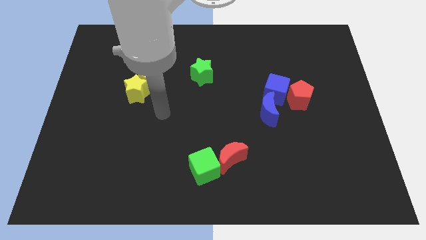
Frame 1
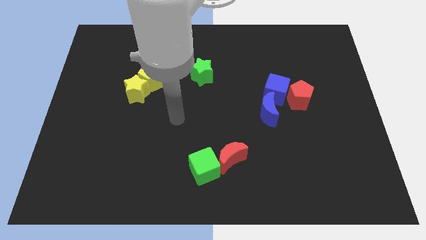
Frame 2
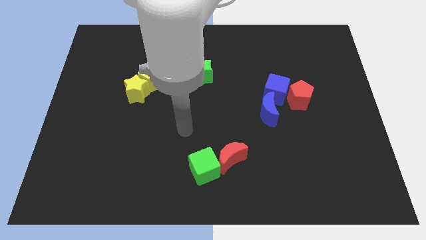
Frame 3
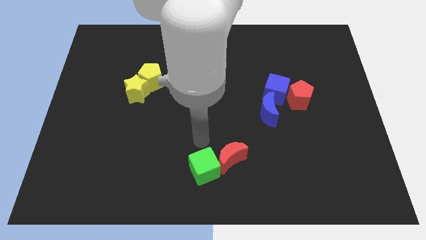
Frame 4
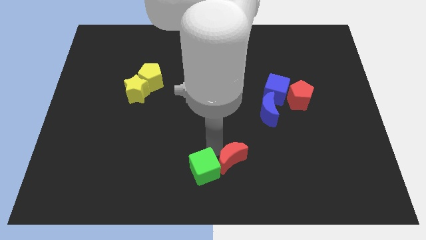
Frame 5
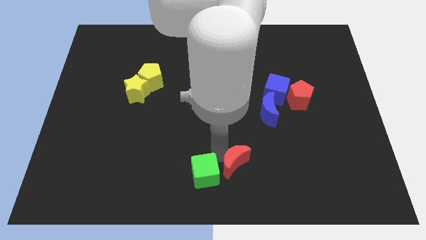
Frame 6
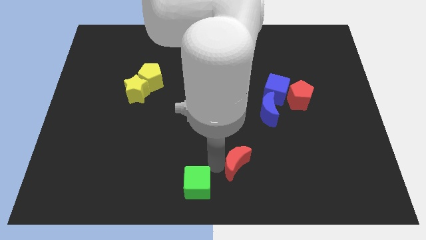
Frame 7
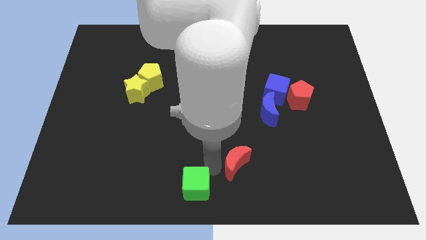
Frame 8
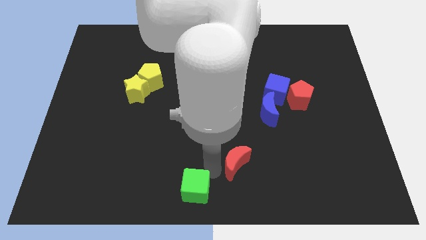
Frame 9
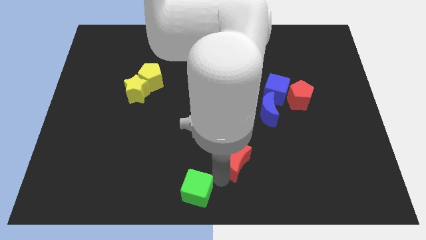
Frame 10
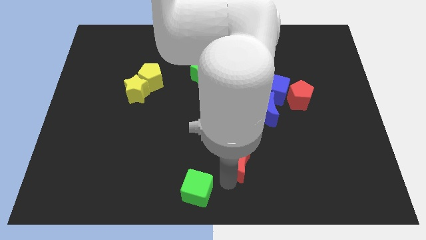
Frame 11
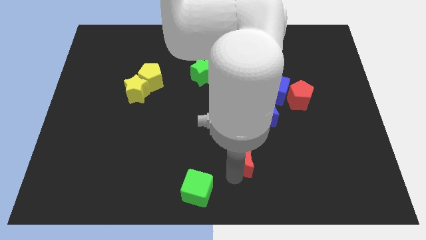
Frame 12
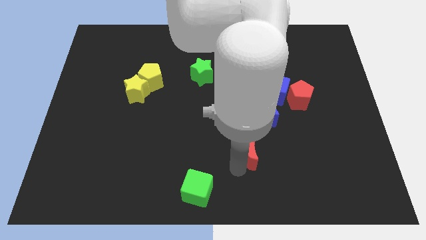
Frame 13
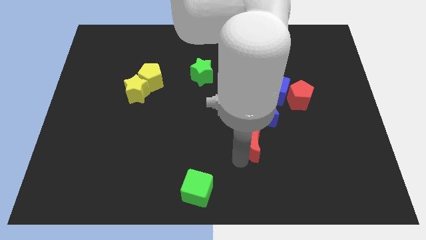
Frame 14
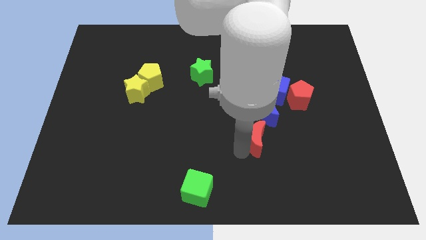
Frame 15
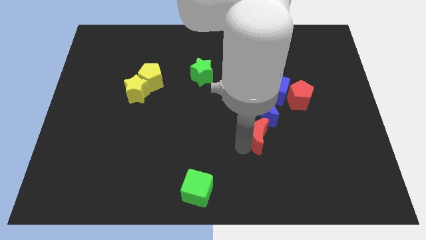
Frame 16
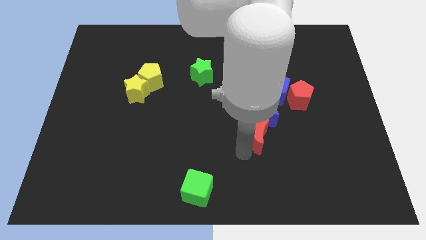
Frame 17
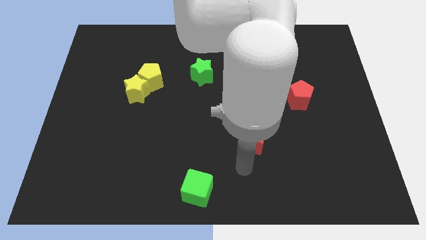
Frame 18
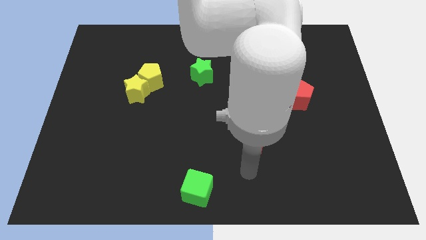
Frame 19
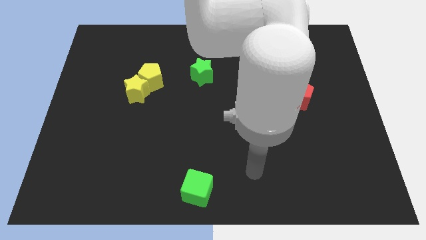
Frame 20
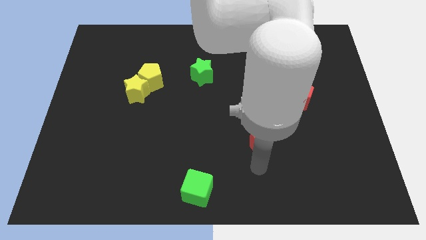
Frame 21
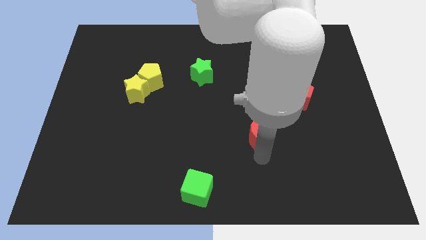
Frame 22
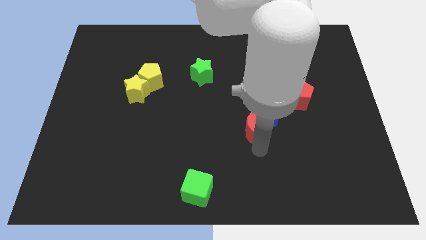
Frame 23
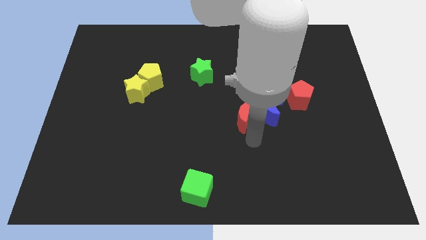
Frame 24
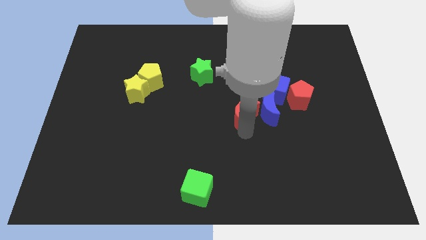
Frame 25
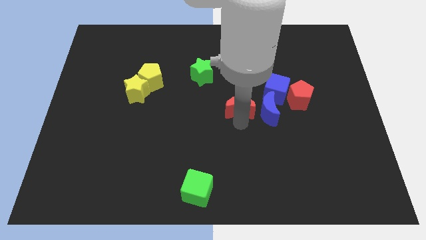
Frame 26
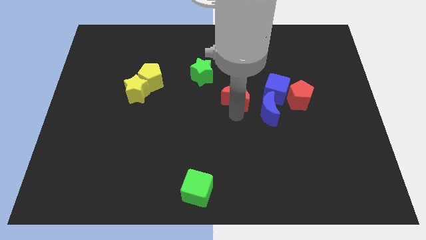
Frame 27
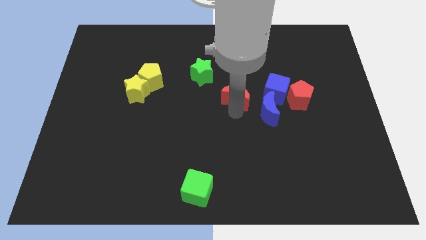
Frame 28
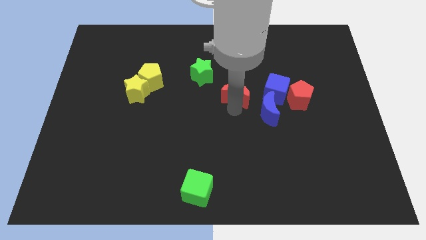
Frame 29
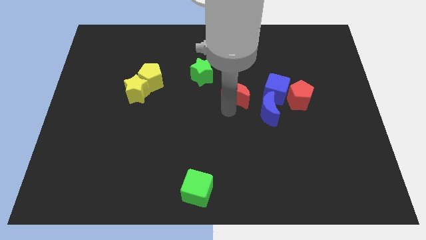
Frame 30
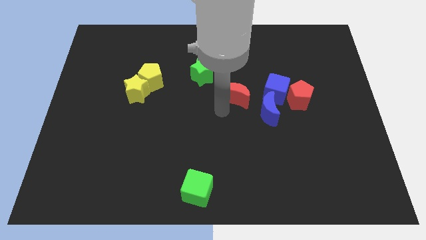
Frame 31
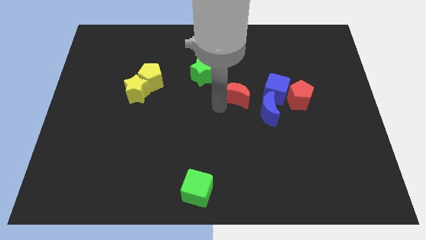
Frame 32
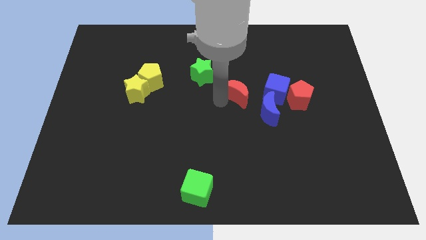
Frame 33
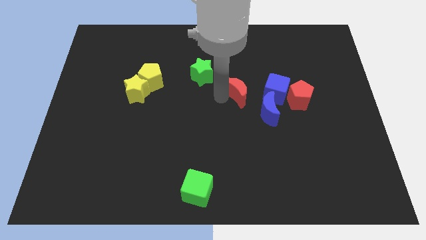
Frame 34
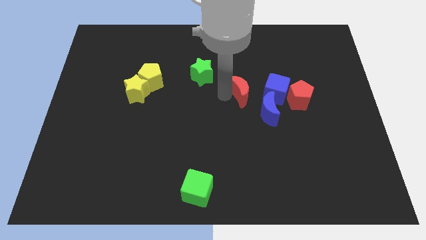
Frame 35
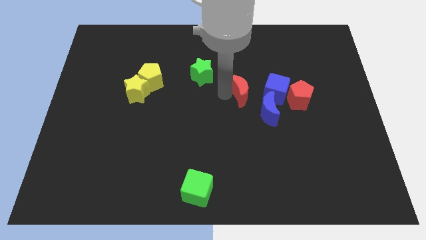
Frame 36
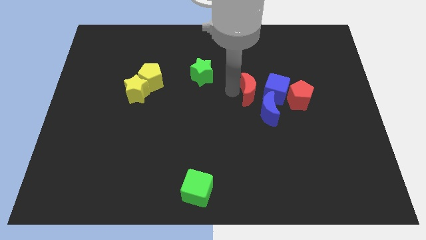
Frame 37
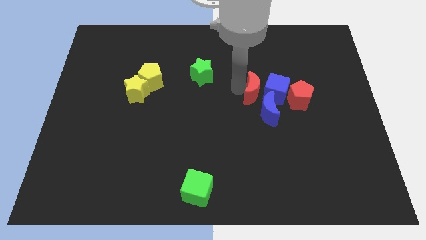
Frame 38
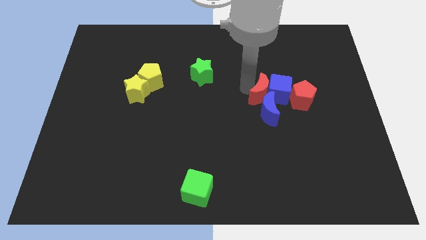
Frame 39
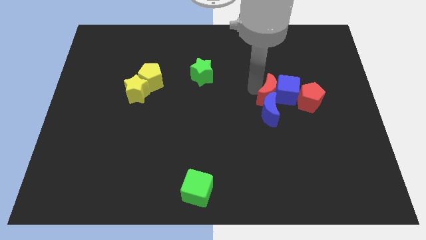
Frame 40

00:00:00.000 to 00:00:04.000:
put the red moon close to the blue cube

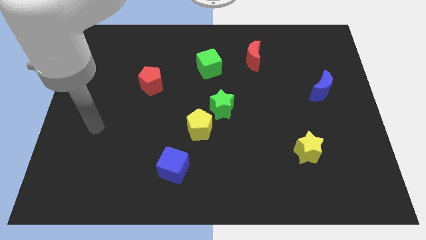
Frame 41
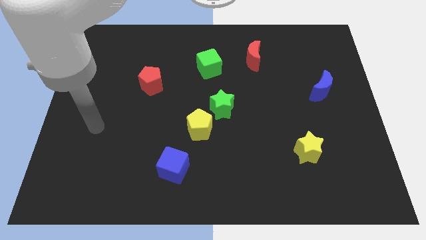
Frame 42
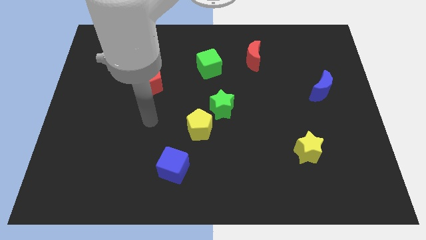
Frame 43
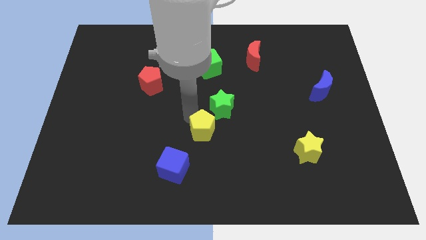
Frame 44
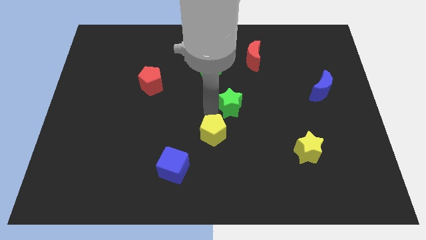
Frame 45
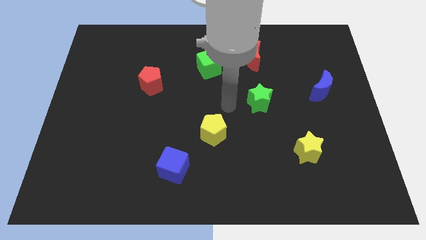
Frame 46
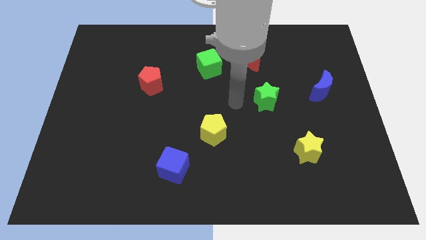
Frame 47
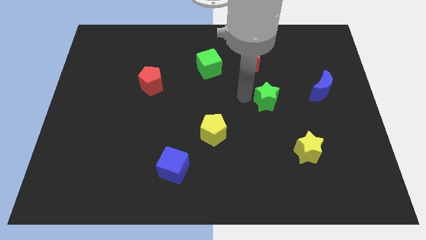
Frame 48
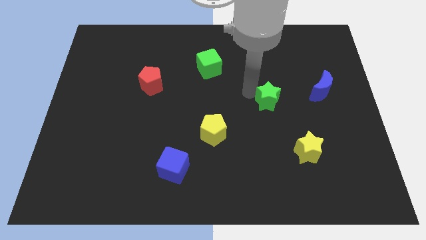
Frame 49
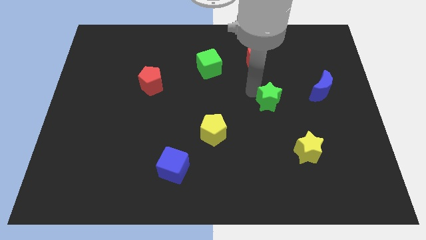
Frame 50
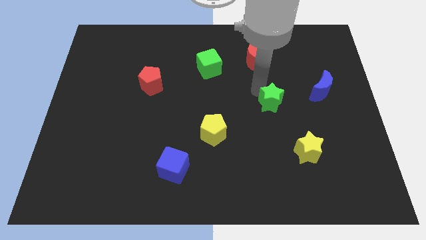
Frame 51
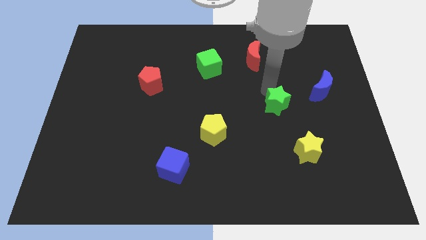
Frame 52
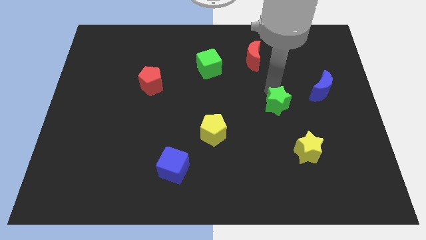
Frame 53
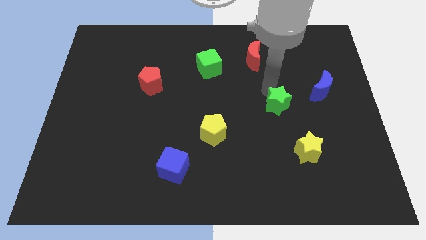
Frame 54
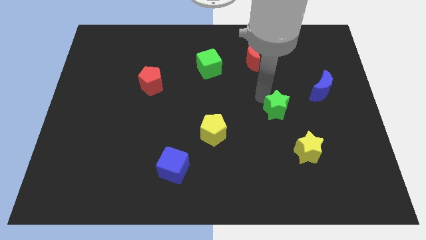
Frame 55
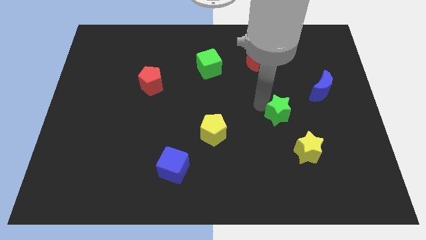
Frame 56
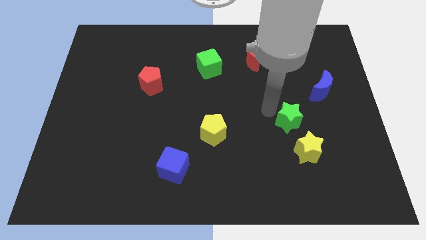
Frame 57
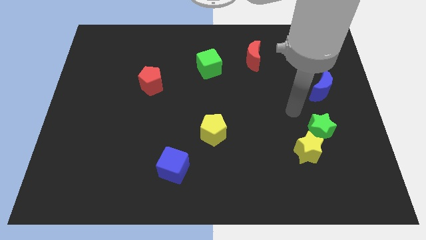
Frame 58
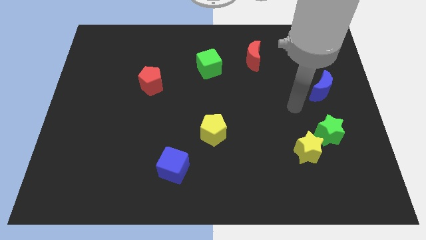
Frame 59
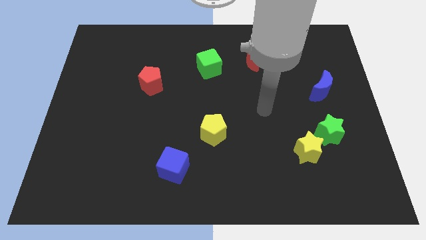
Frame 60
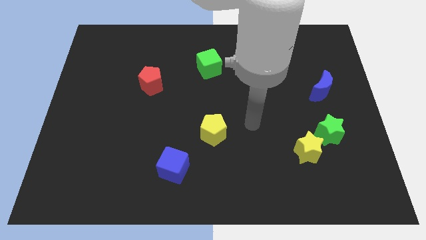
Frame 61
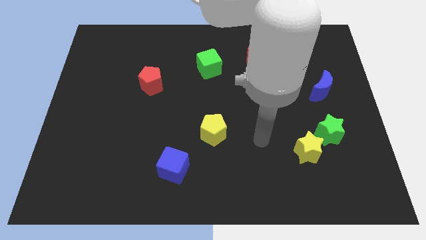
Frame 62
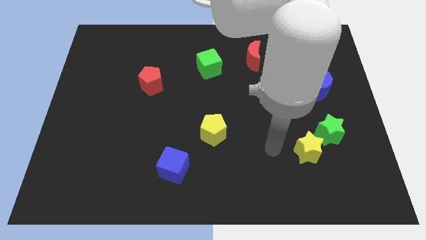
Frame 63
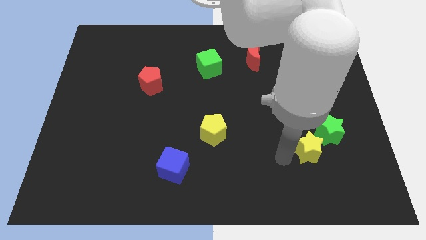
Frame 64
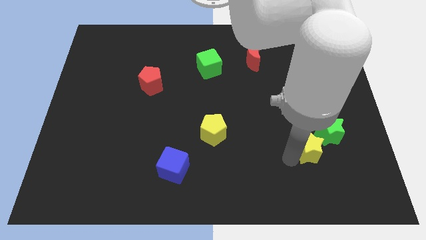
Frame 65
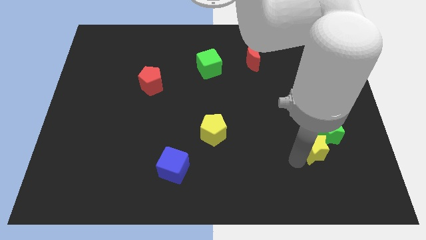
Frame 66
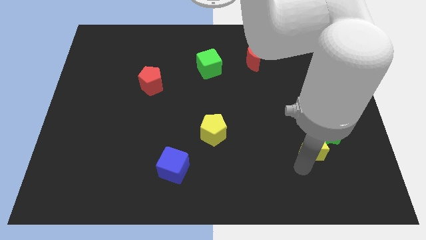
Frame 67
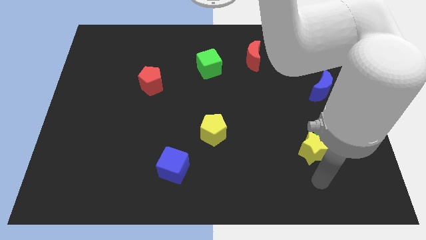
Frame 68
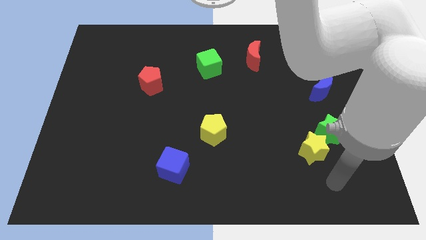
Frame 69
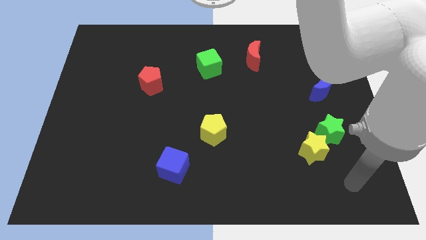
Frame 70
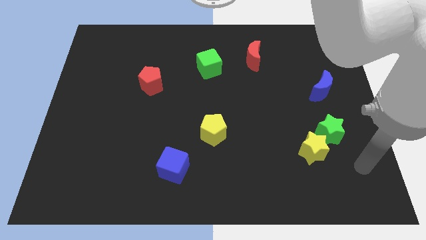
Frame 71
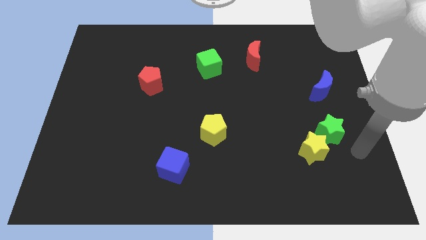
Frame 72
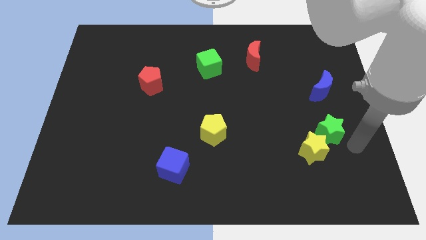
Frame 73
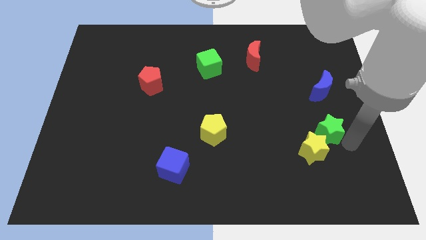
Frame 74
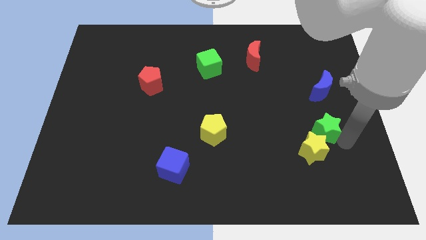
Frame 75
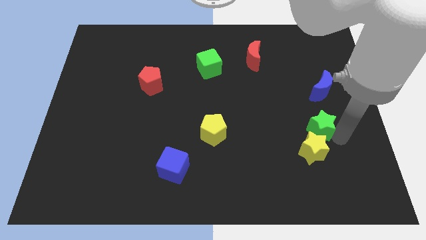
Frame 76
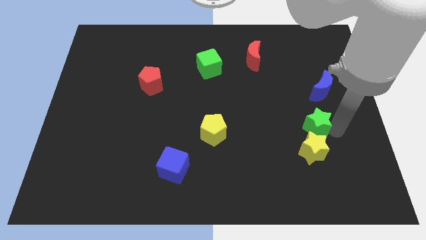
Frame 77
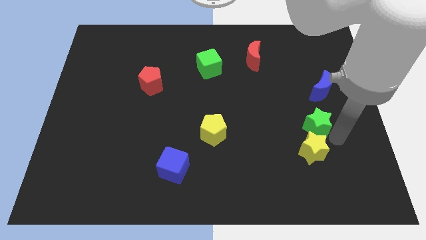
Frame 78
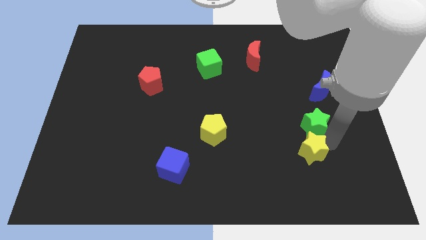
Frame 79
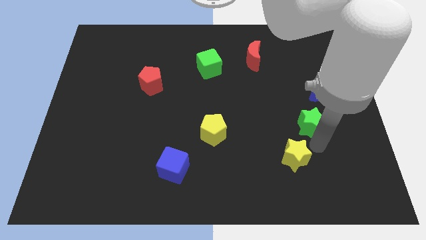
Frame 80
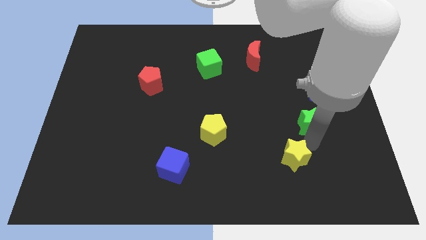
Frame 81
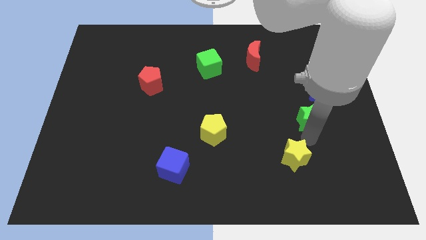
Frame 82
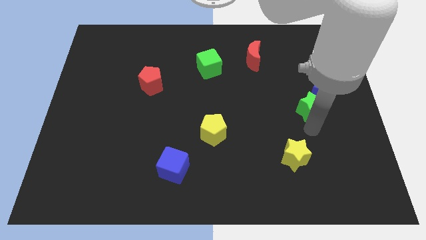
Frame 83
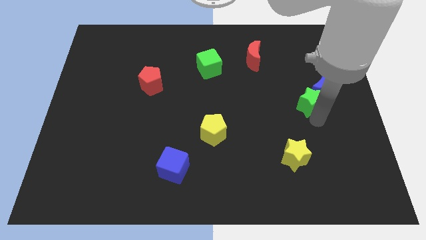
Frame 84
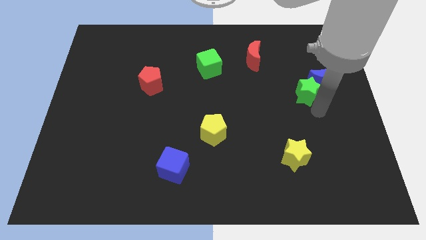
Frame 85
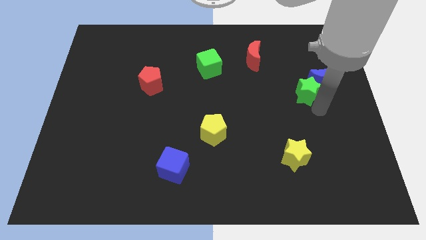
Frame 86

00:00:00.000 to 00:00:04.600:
put the green star to the blue moon

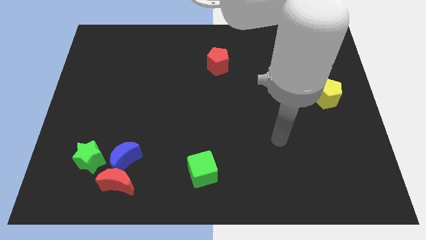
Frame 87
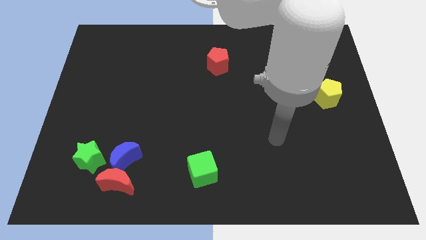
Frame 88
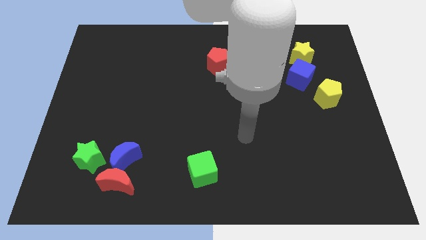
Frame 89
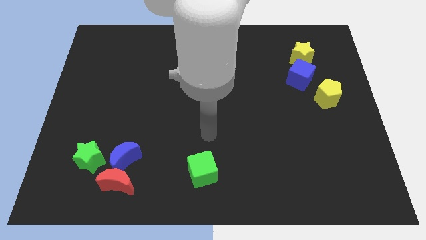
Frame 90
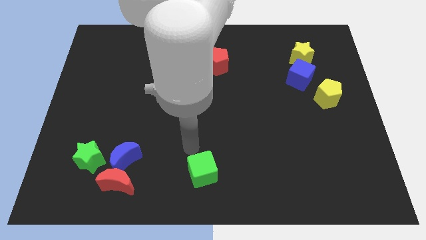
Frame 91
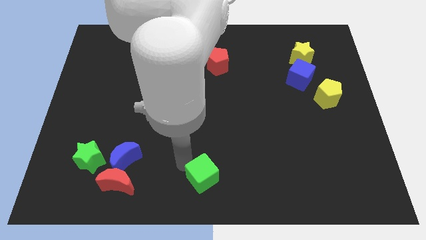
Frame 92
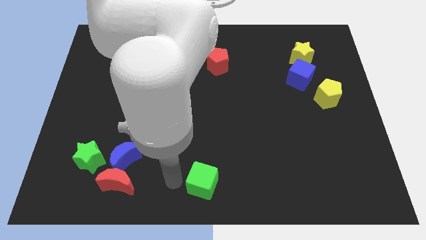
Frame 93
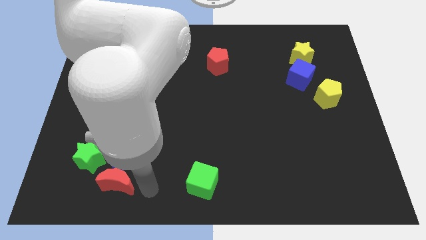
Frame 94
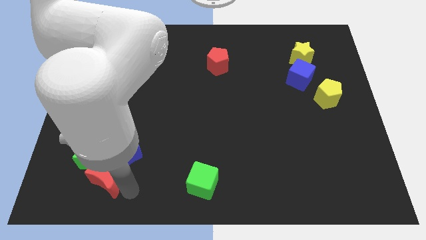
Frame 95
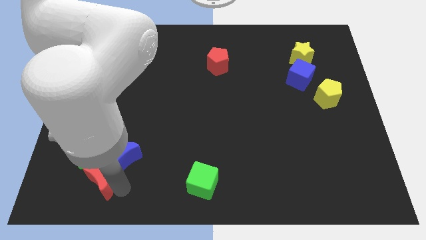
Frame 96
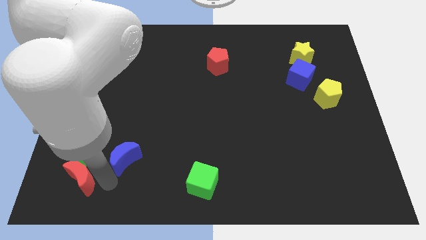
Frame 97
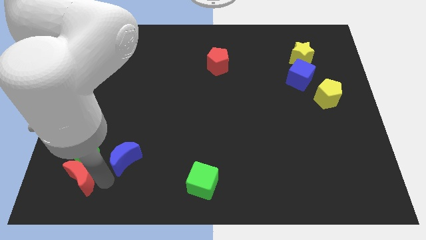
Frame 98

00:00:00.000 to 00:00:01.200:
push the red moon to the green star
